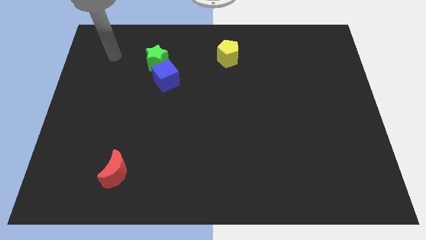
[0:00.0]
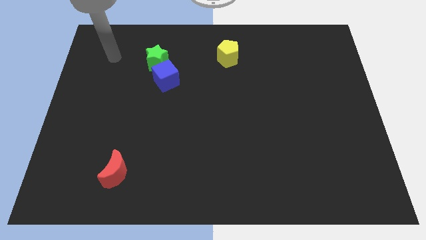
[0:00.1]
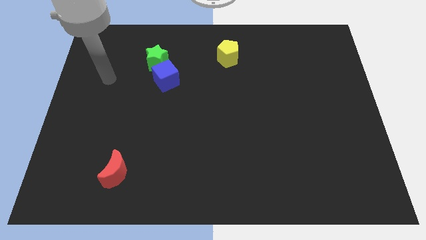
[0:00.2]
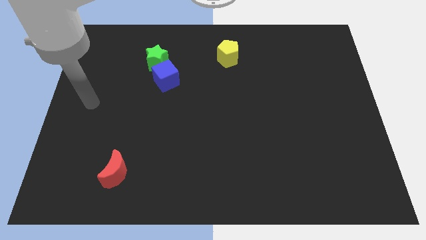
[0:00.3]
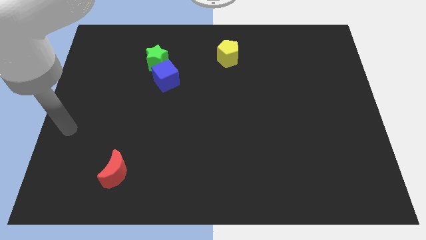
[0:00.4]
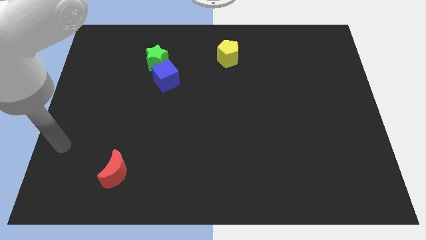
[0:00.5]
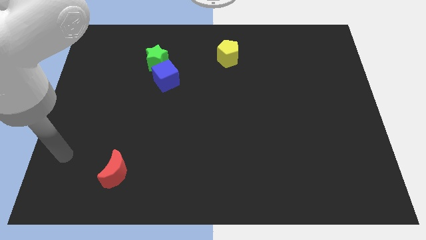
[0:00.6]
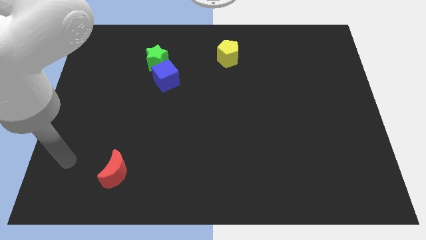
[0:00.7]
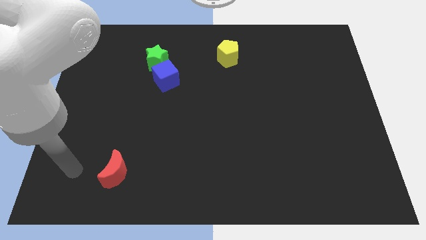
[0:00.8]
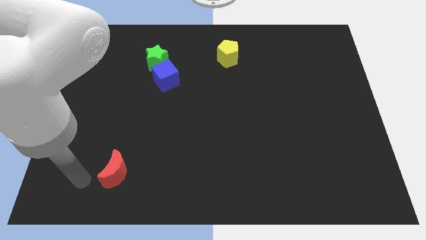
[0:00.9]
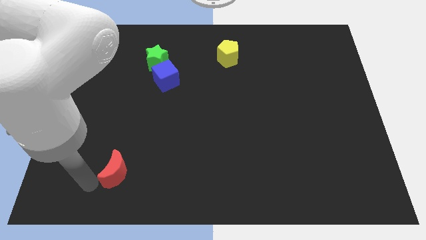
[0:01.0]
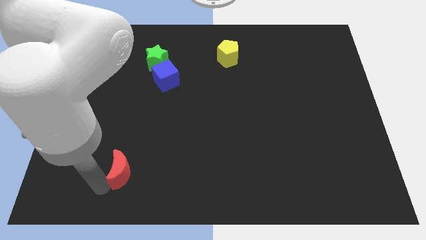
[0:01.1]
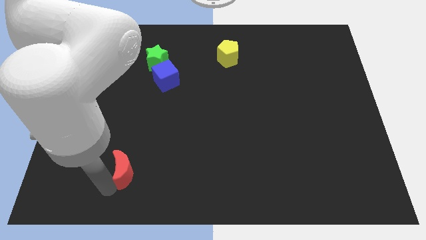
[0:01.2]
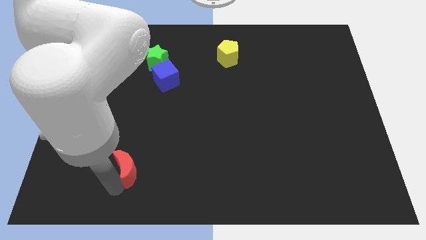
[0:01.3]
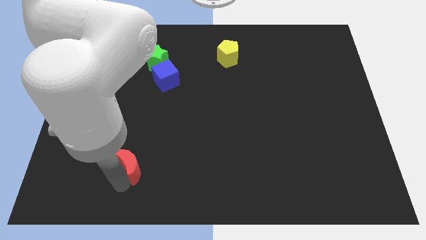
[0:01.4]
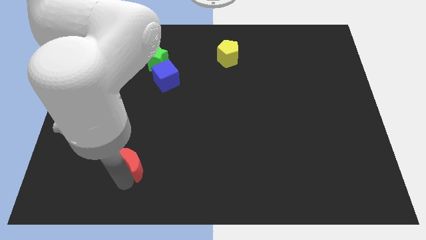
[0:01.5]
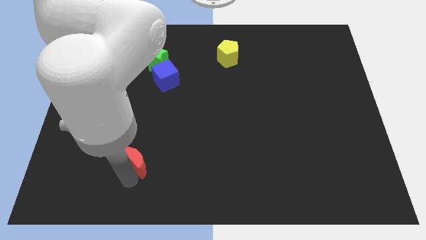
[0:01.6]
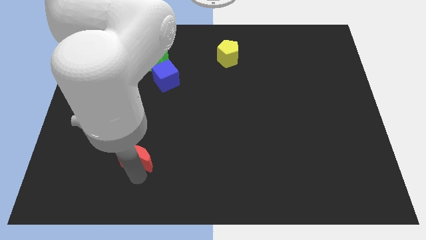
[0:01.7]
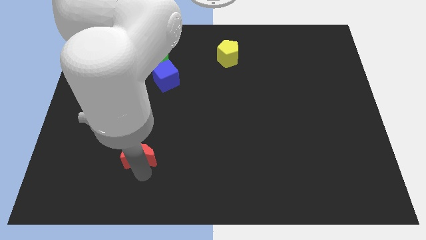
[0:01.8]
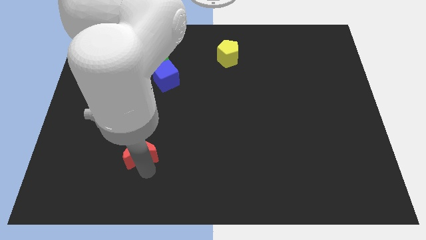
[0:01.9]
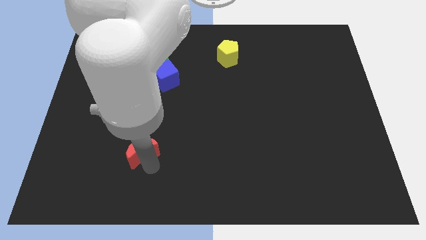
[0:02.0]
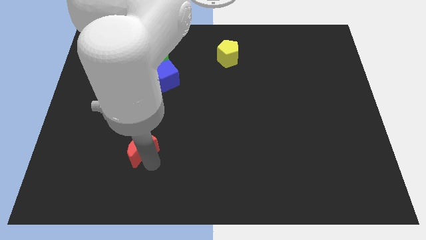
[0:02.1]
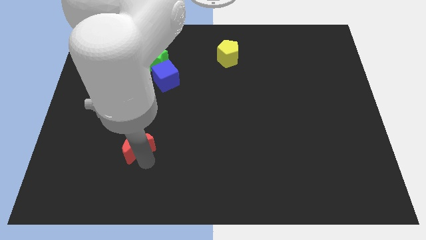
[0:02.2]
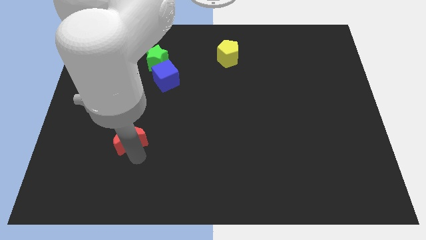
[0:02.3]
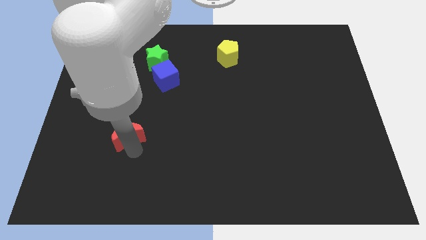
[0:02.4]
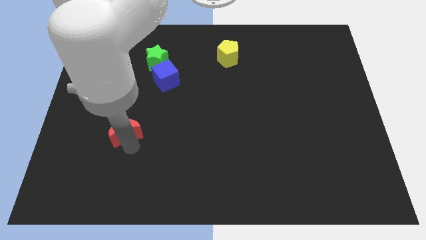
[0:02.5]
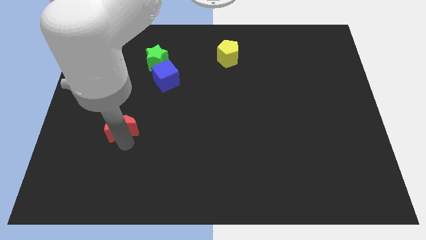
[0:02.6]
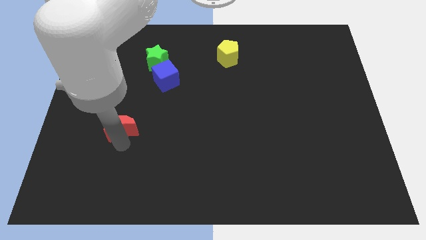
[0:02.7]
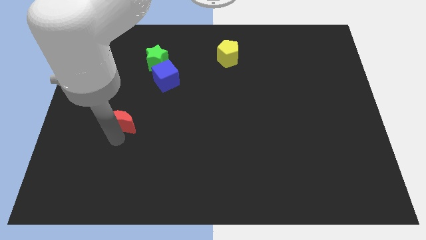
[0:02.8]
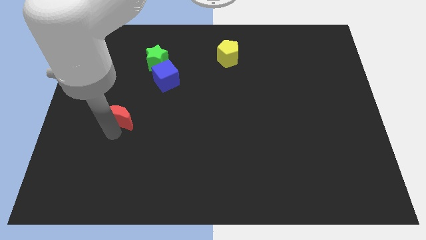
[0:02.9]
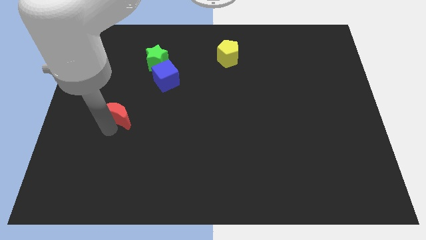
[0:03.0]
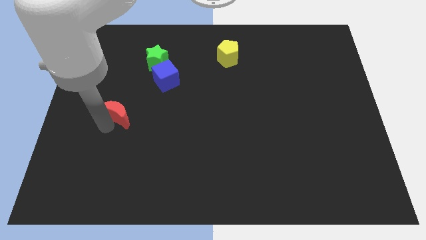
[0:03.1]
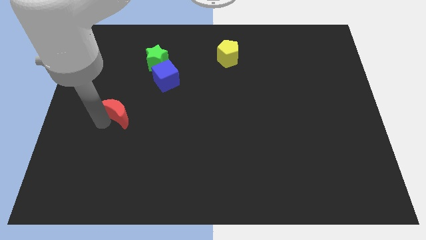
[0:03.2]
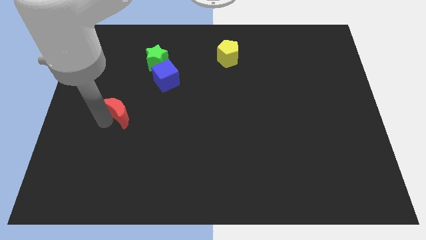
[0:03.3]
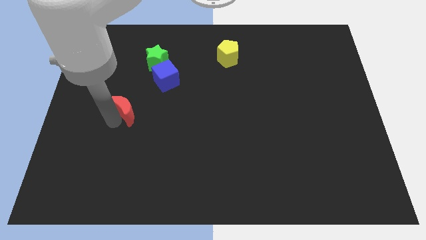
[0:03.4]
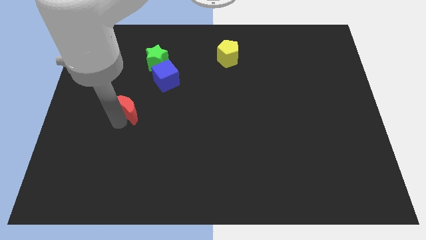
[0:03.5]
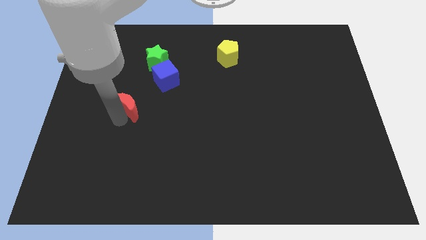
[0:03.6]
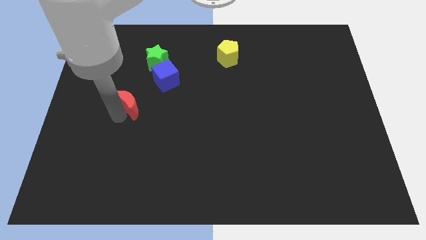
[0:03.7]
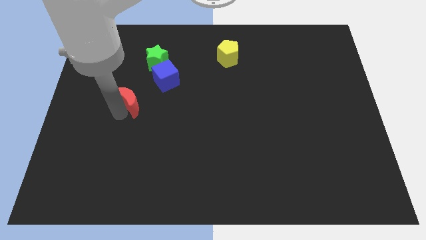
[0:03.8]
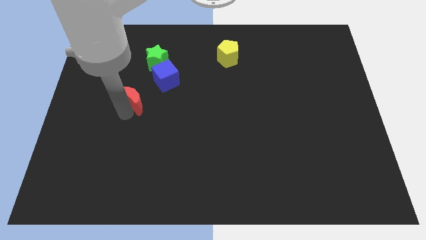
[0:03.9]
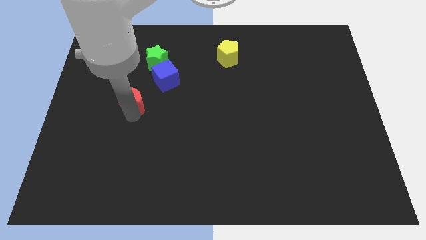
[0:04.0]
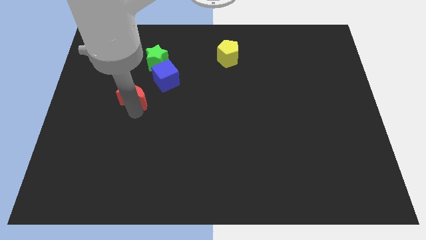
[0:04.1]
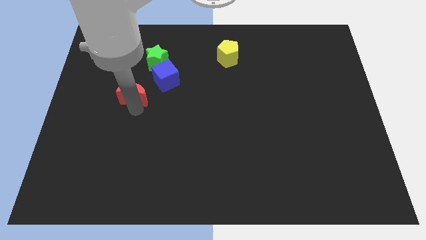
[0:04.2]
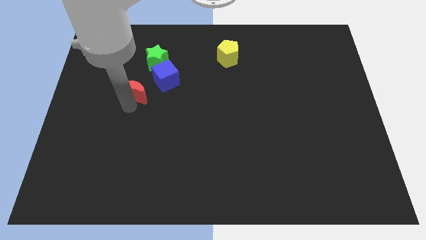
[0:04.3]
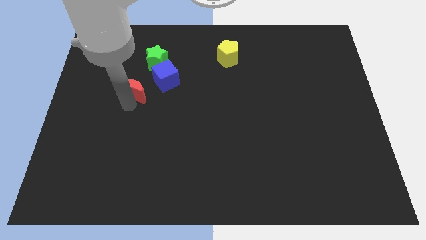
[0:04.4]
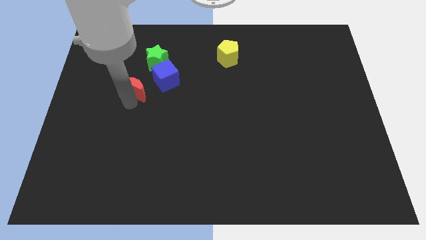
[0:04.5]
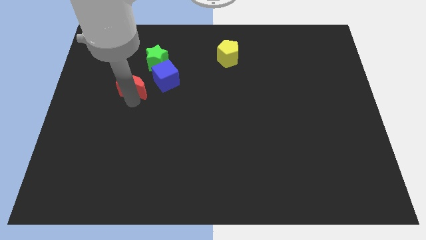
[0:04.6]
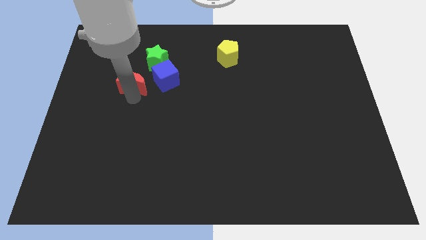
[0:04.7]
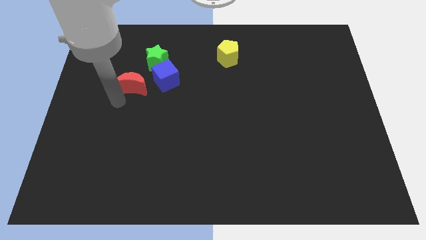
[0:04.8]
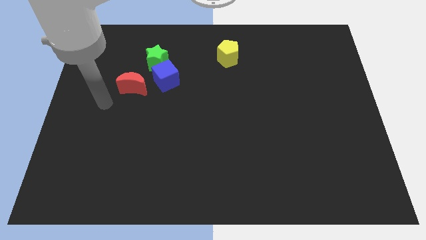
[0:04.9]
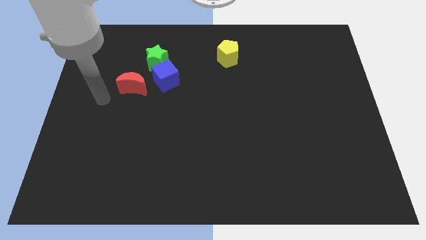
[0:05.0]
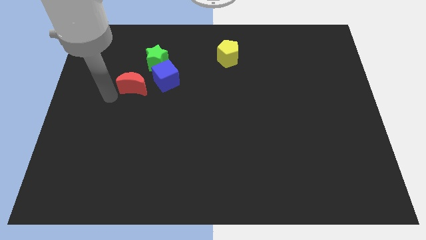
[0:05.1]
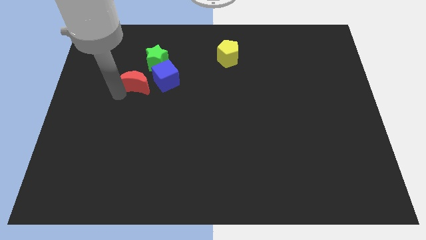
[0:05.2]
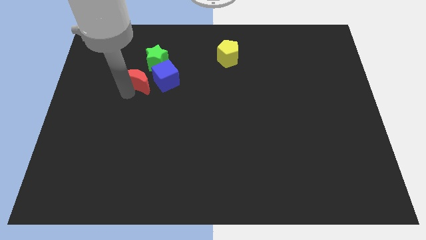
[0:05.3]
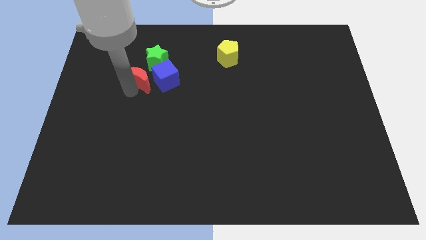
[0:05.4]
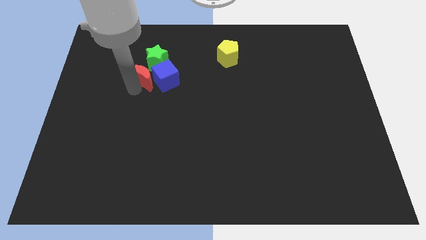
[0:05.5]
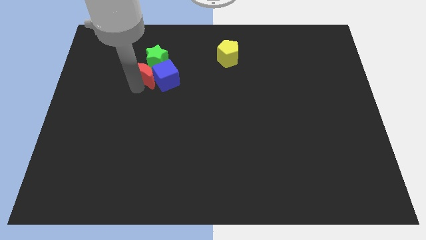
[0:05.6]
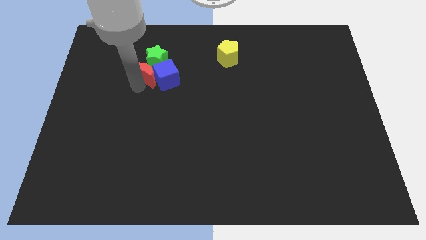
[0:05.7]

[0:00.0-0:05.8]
slide the red moon next to the cube

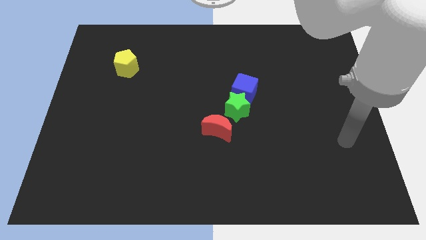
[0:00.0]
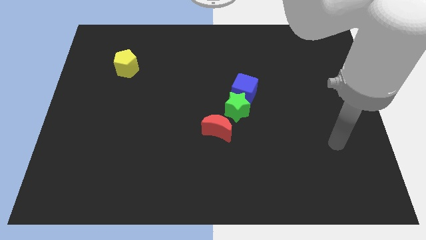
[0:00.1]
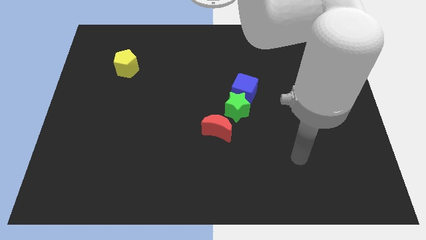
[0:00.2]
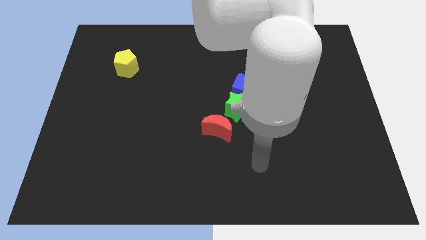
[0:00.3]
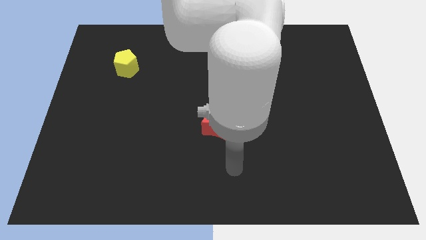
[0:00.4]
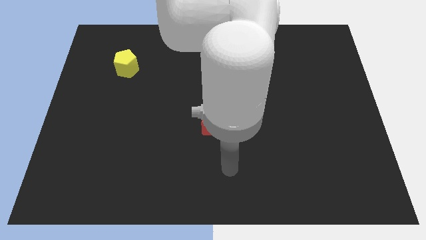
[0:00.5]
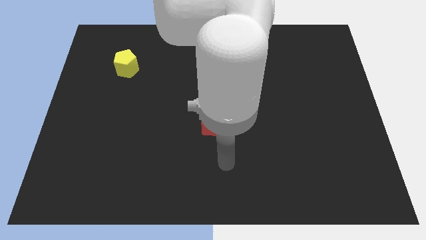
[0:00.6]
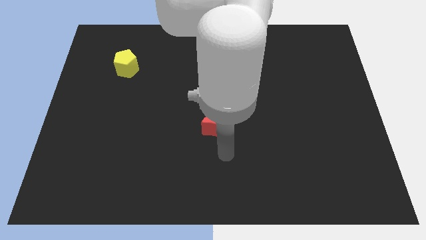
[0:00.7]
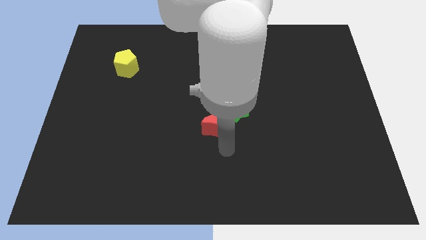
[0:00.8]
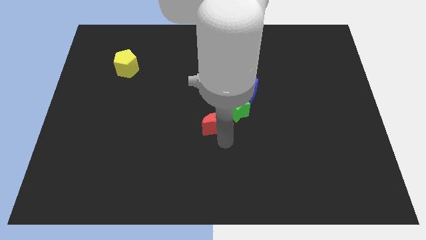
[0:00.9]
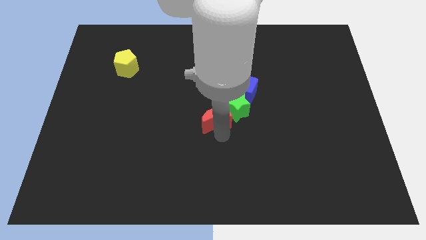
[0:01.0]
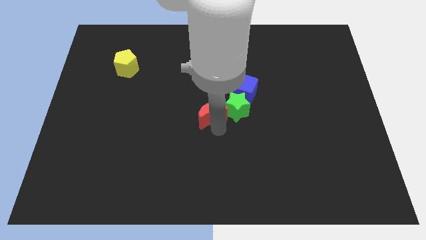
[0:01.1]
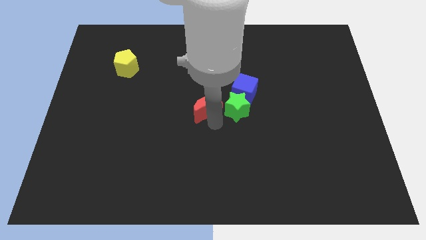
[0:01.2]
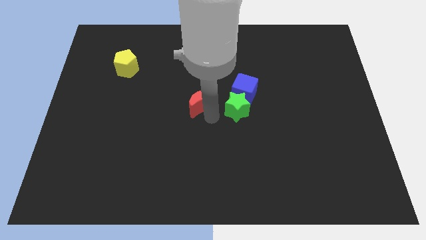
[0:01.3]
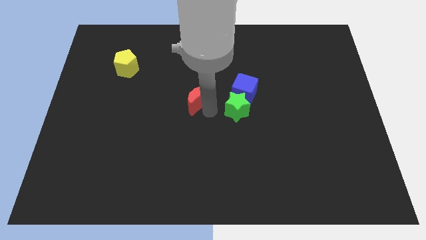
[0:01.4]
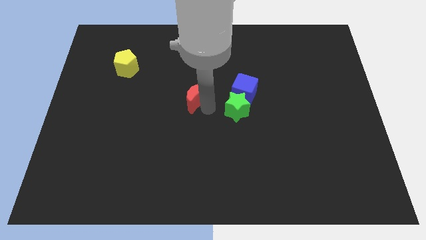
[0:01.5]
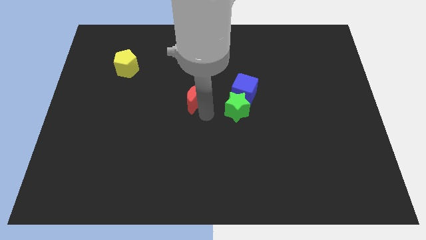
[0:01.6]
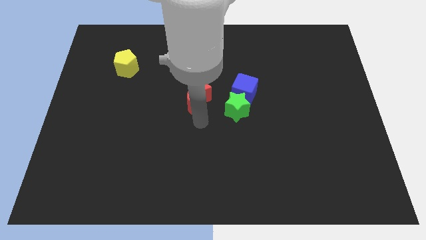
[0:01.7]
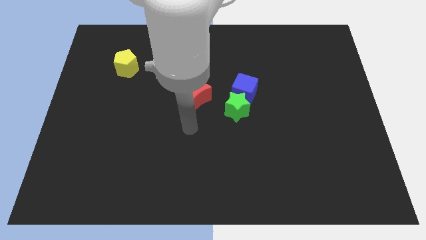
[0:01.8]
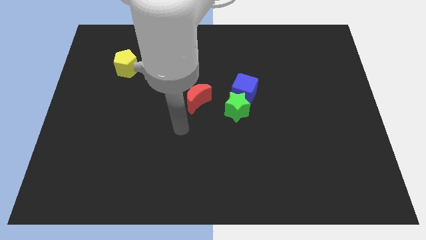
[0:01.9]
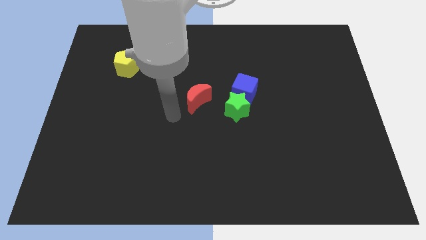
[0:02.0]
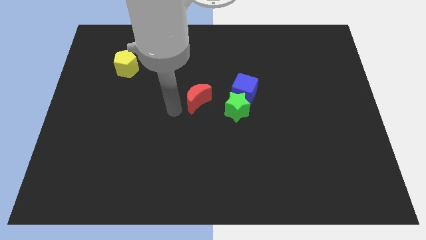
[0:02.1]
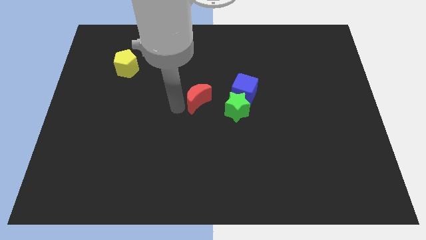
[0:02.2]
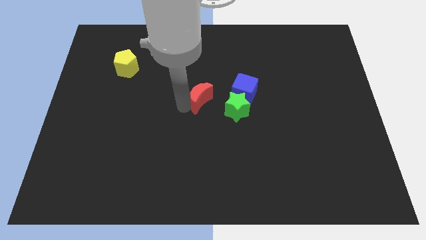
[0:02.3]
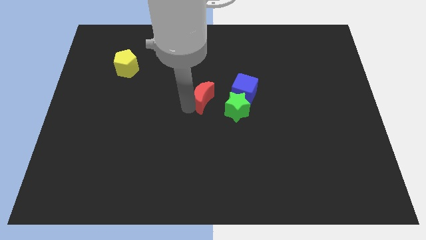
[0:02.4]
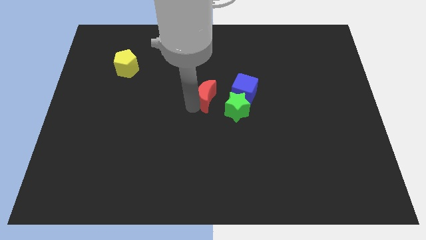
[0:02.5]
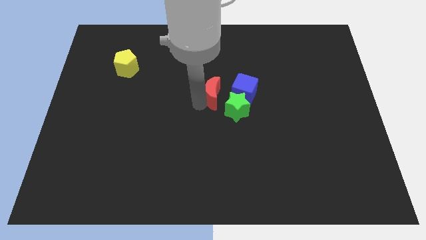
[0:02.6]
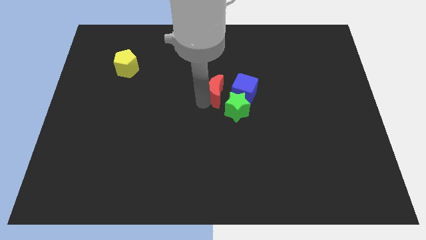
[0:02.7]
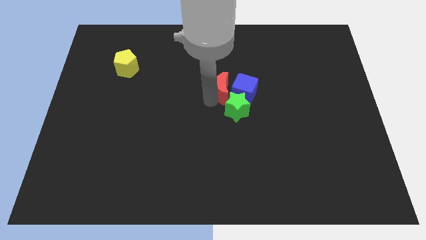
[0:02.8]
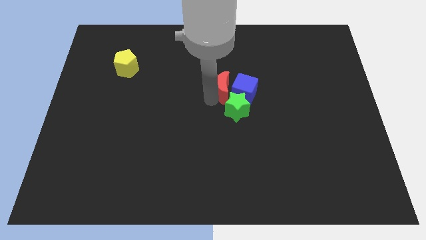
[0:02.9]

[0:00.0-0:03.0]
push the red moon towards the blue block
